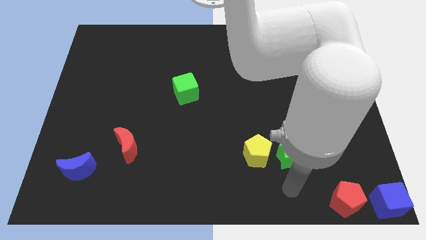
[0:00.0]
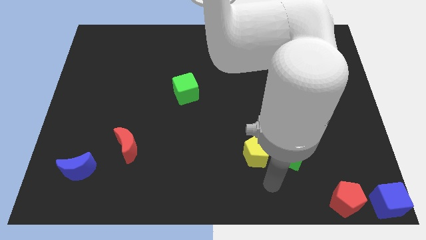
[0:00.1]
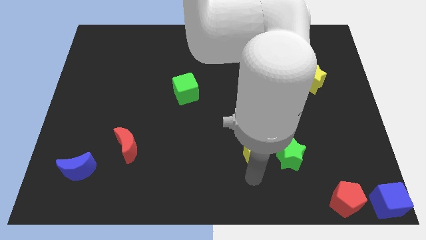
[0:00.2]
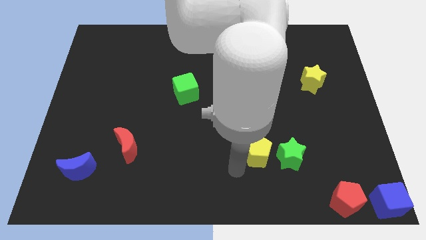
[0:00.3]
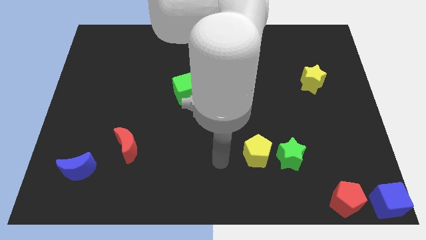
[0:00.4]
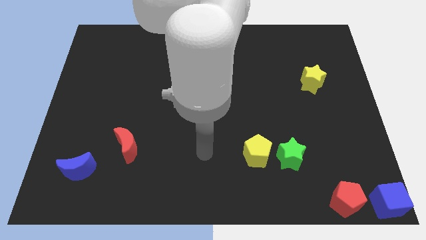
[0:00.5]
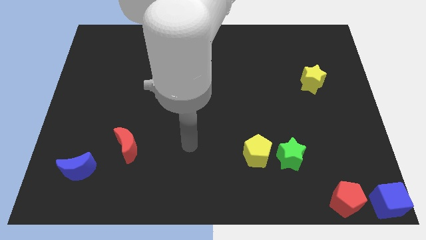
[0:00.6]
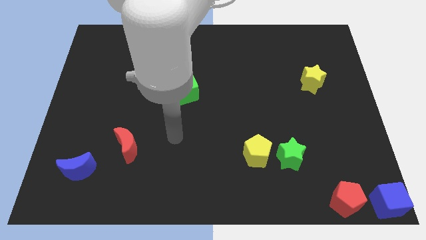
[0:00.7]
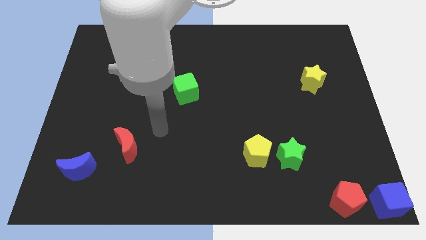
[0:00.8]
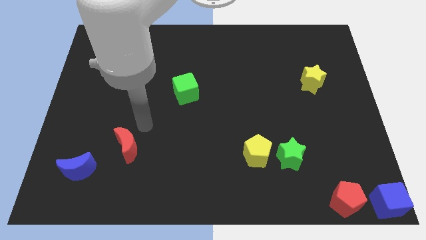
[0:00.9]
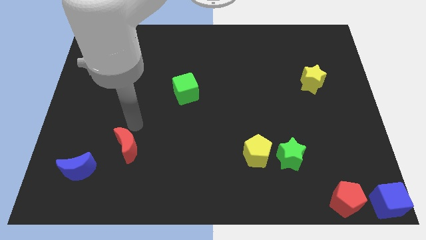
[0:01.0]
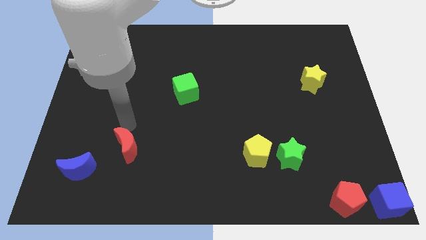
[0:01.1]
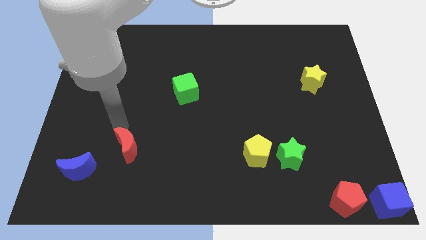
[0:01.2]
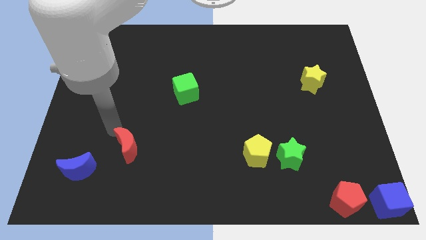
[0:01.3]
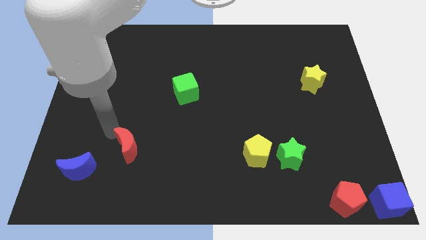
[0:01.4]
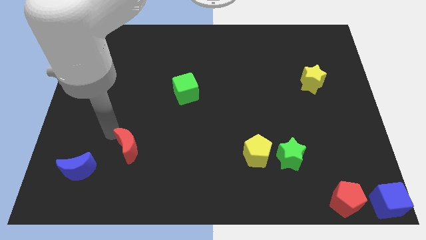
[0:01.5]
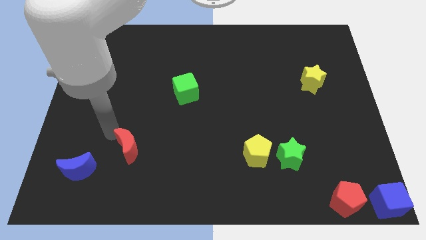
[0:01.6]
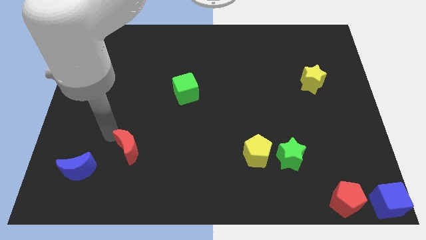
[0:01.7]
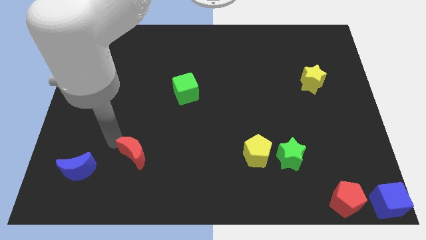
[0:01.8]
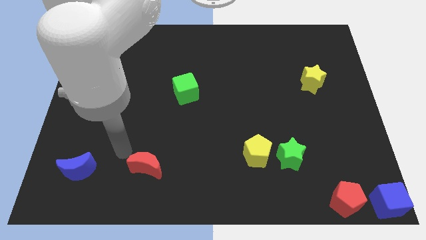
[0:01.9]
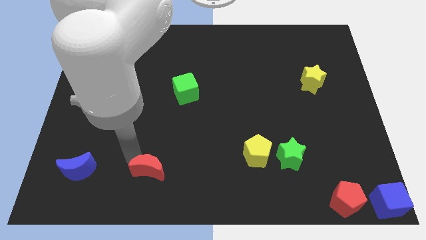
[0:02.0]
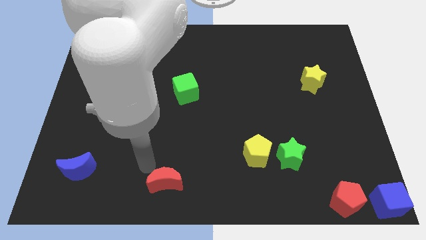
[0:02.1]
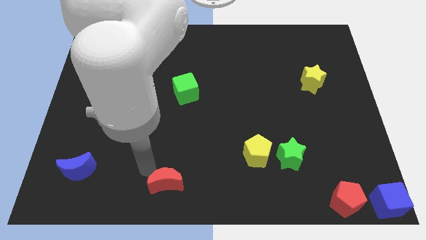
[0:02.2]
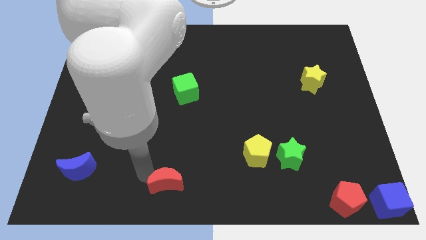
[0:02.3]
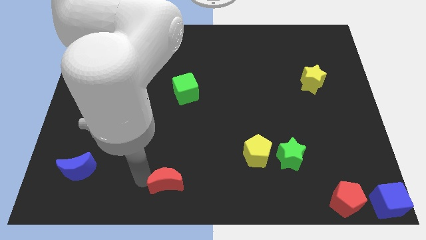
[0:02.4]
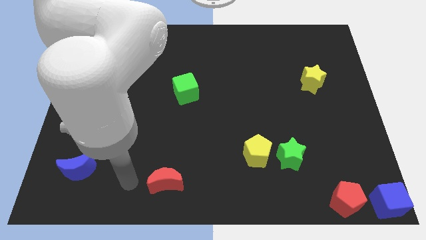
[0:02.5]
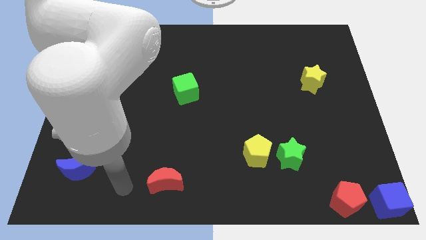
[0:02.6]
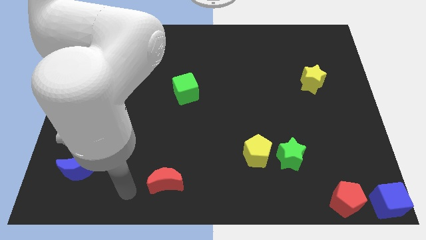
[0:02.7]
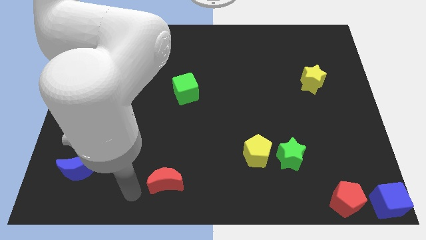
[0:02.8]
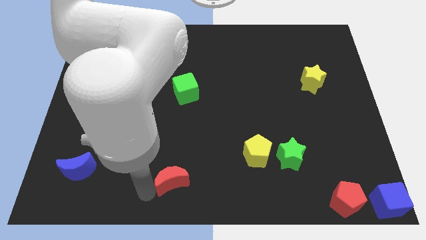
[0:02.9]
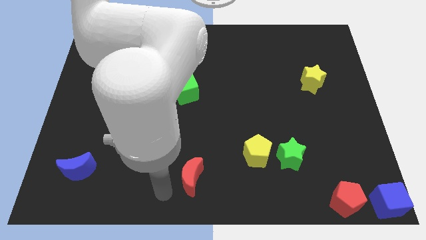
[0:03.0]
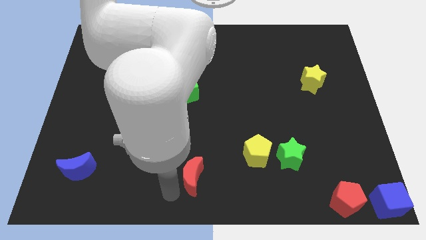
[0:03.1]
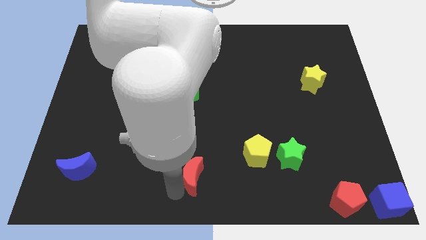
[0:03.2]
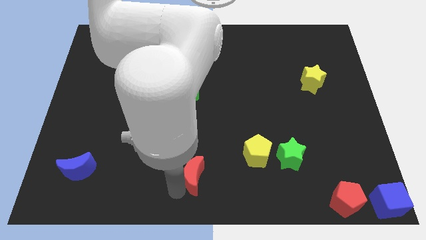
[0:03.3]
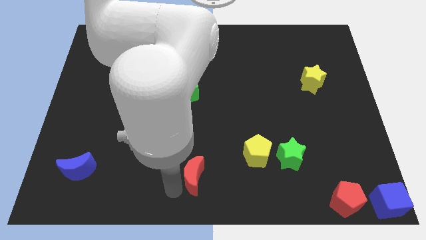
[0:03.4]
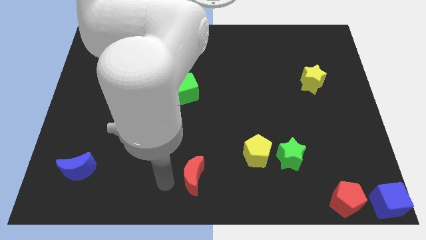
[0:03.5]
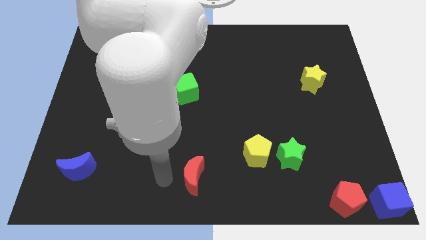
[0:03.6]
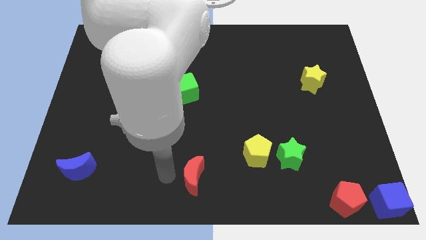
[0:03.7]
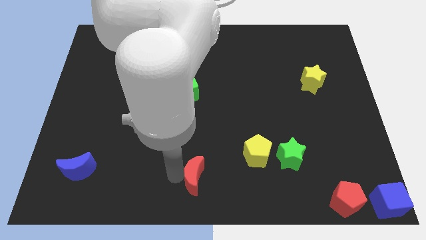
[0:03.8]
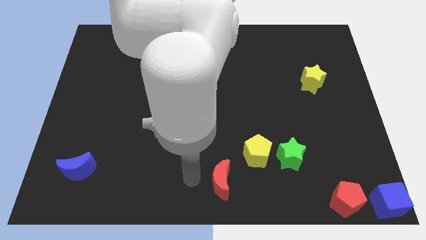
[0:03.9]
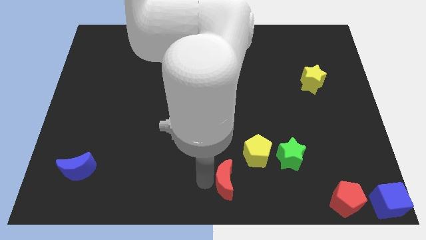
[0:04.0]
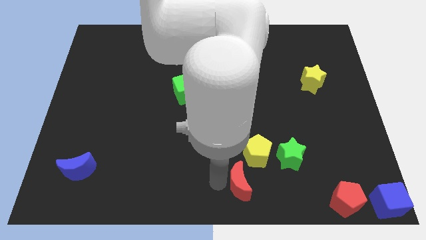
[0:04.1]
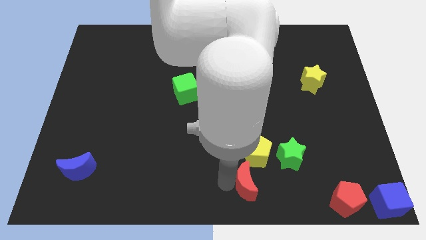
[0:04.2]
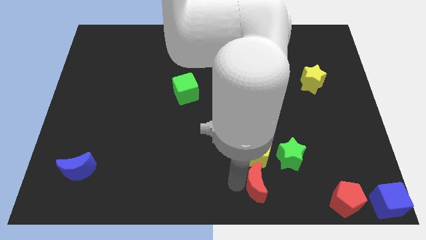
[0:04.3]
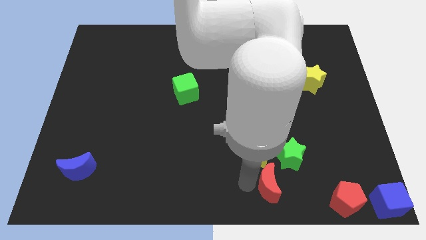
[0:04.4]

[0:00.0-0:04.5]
push the red crescent to the bottom of the yellow pentagon

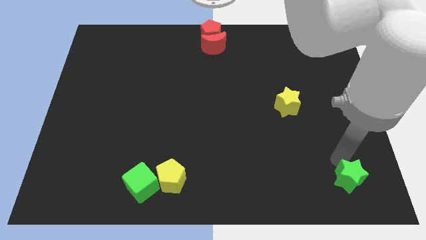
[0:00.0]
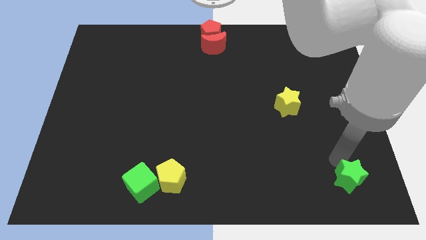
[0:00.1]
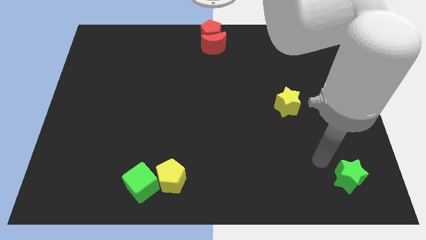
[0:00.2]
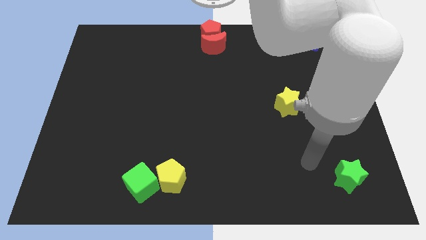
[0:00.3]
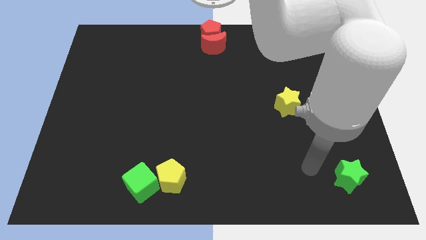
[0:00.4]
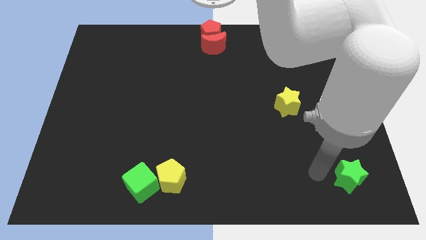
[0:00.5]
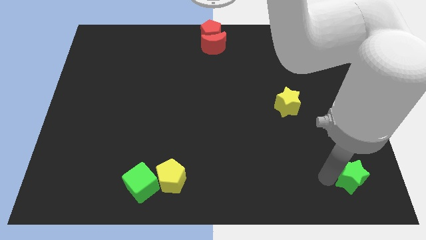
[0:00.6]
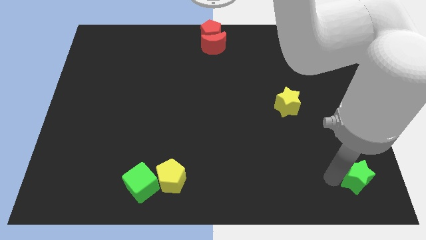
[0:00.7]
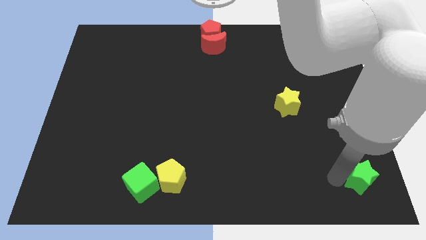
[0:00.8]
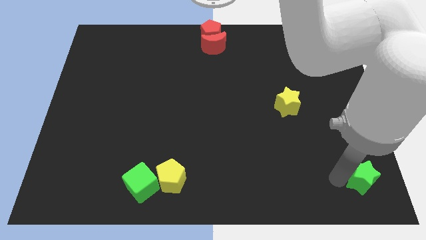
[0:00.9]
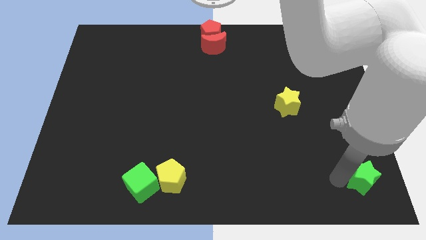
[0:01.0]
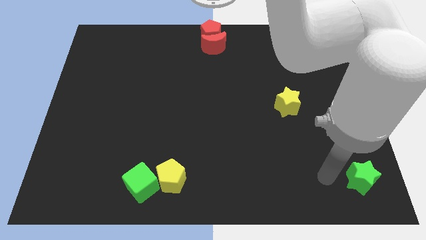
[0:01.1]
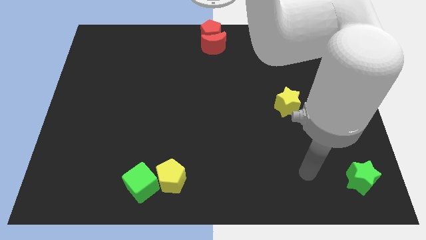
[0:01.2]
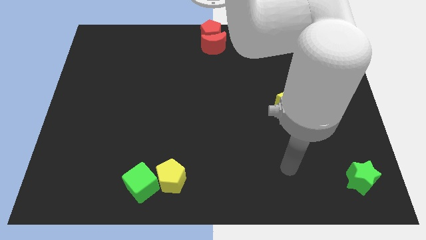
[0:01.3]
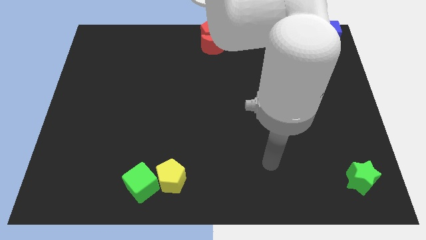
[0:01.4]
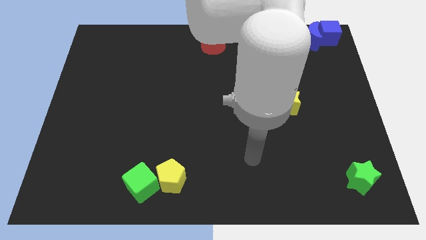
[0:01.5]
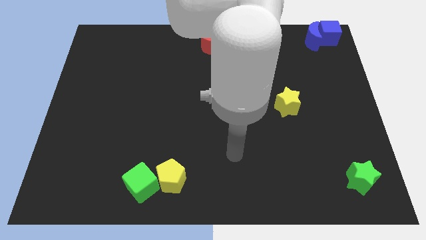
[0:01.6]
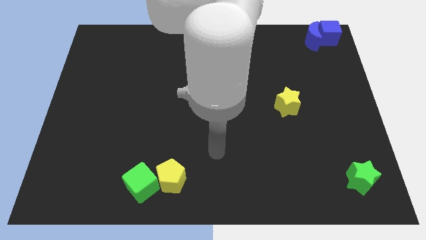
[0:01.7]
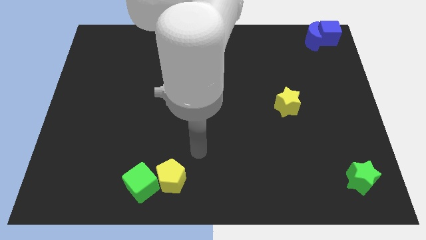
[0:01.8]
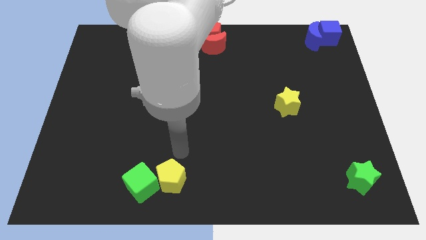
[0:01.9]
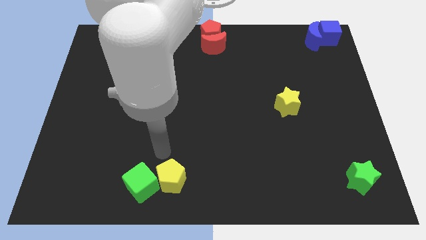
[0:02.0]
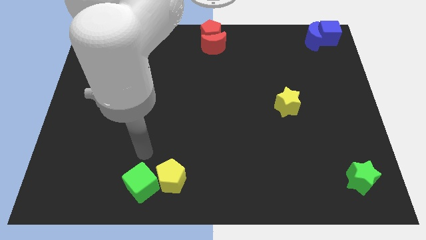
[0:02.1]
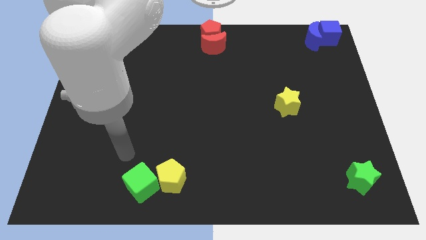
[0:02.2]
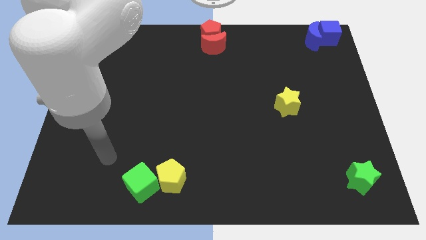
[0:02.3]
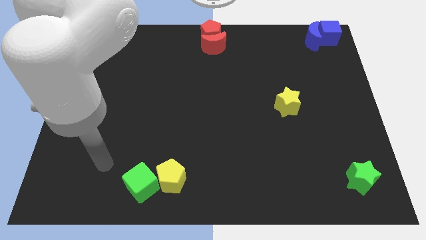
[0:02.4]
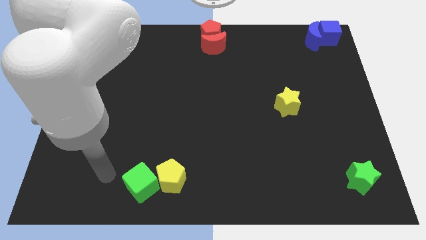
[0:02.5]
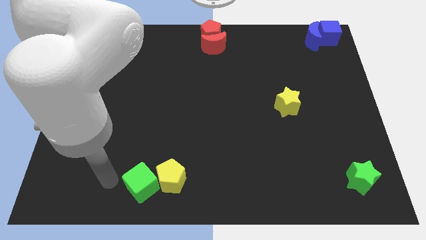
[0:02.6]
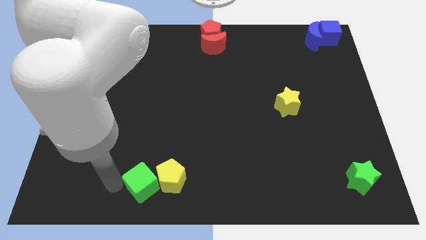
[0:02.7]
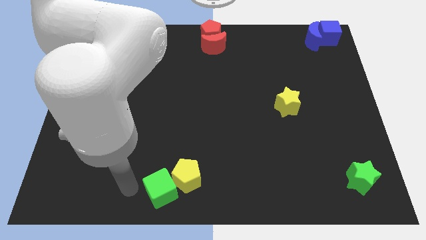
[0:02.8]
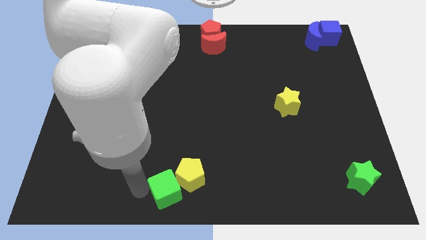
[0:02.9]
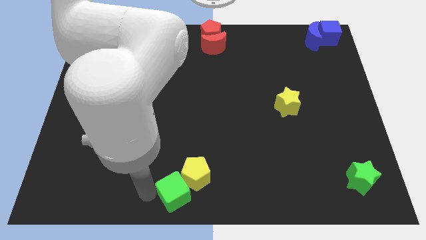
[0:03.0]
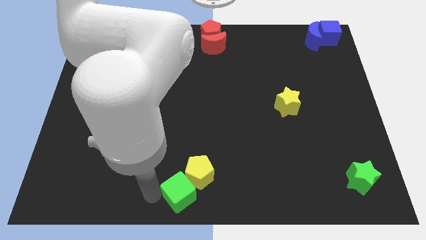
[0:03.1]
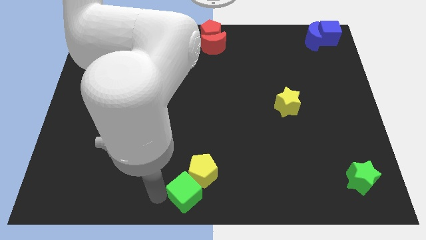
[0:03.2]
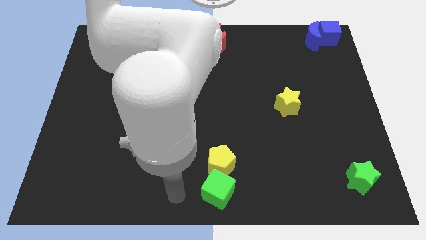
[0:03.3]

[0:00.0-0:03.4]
move the arm away from the green star

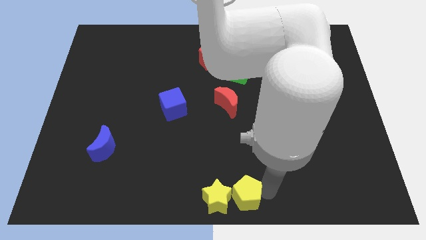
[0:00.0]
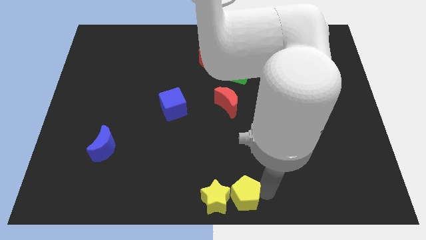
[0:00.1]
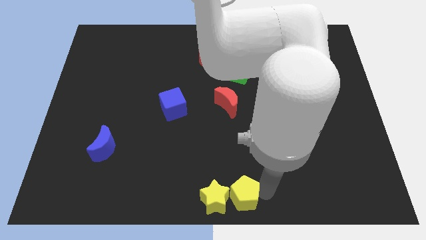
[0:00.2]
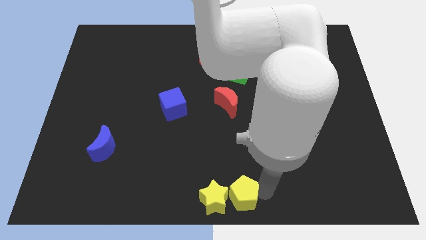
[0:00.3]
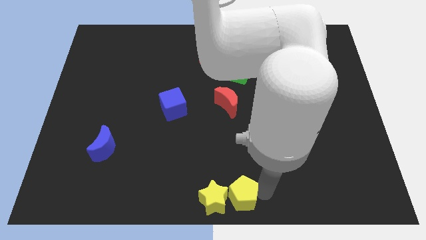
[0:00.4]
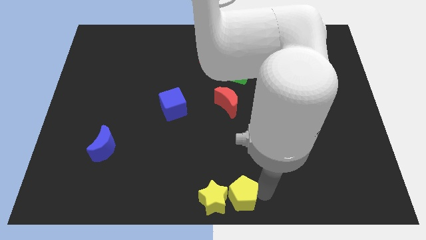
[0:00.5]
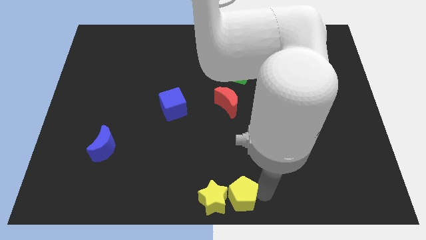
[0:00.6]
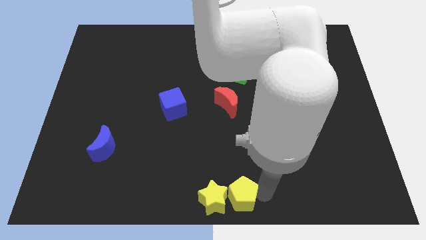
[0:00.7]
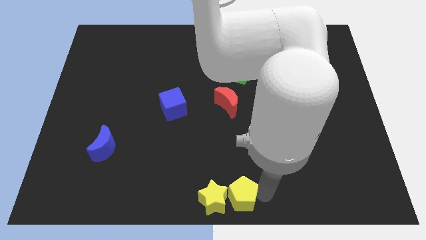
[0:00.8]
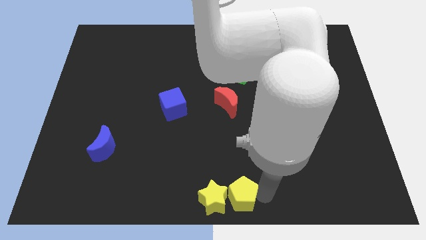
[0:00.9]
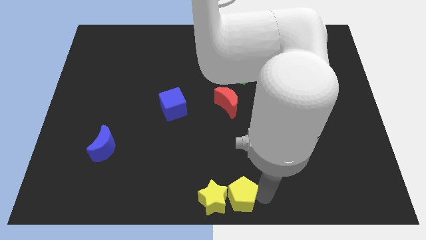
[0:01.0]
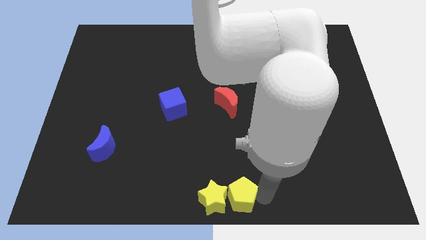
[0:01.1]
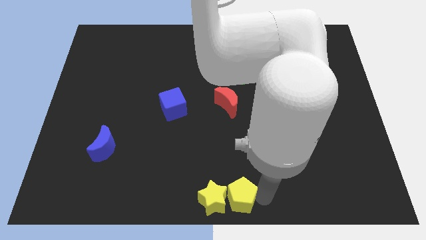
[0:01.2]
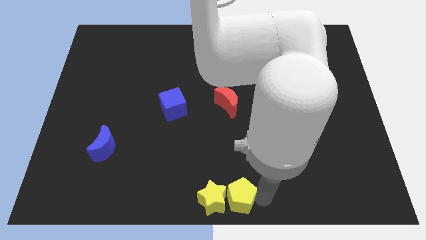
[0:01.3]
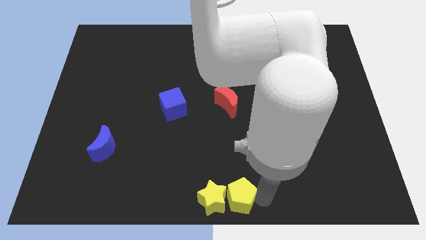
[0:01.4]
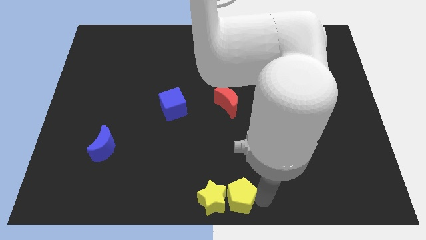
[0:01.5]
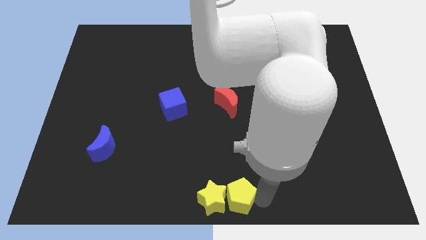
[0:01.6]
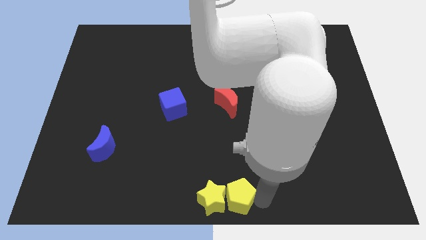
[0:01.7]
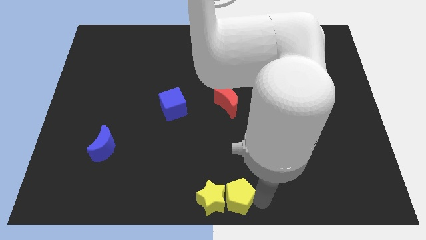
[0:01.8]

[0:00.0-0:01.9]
move the yellow star and pentagon towards the bottom center of the board
